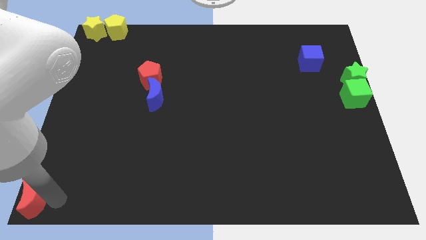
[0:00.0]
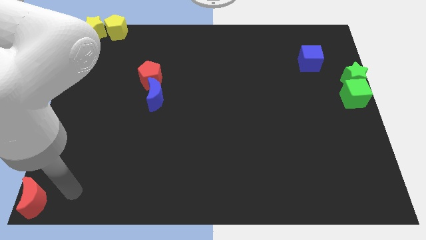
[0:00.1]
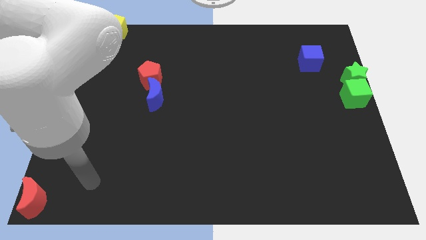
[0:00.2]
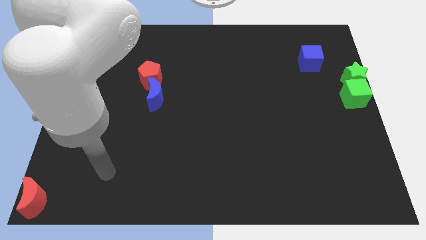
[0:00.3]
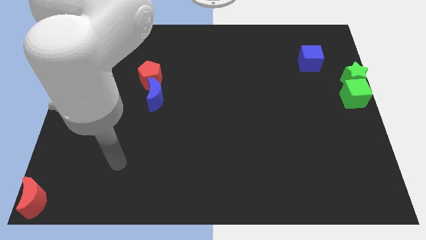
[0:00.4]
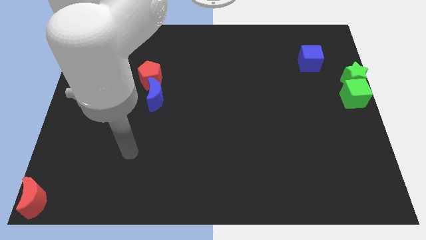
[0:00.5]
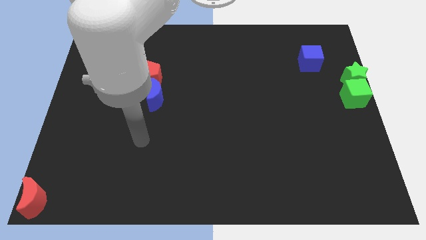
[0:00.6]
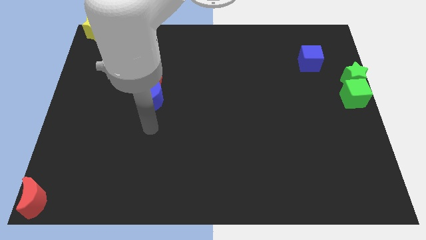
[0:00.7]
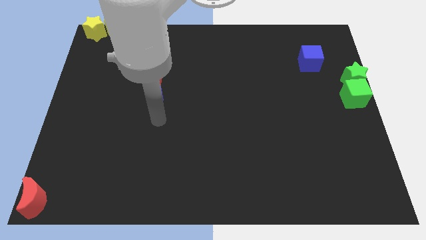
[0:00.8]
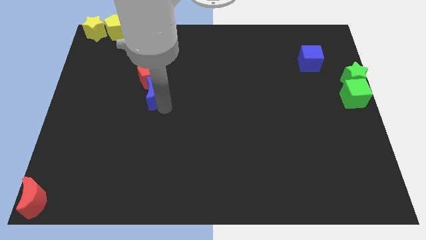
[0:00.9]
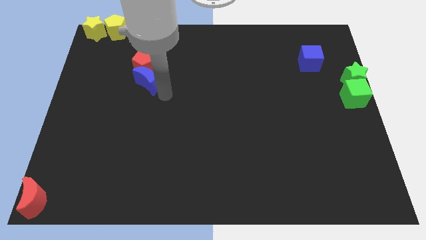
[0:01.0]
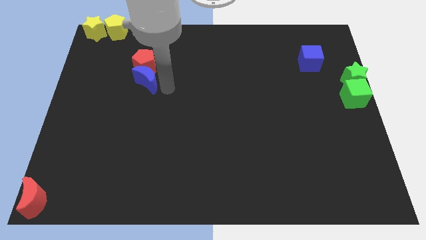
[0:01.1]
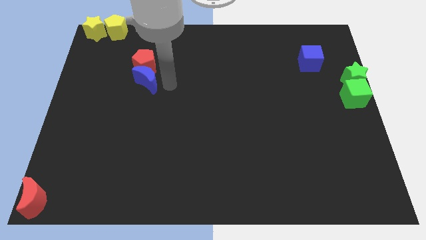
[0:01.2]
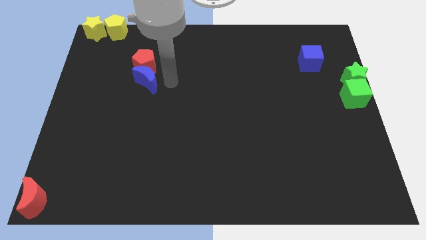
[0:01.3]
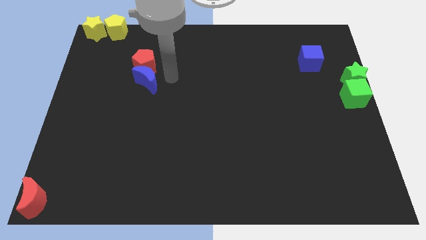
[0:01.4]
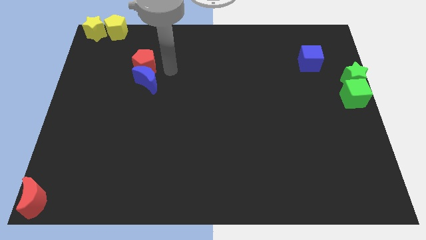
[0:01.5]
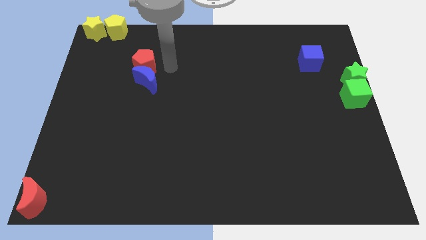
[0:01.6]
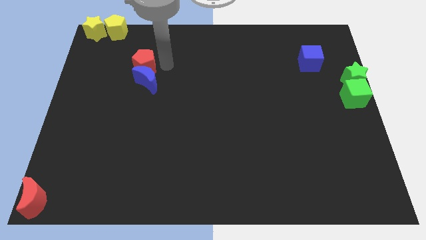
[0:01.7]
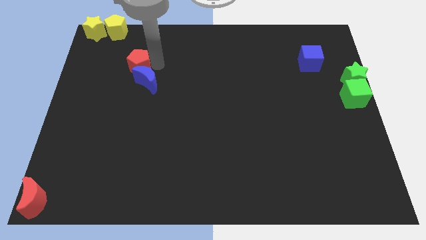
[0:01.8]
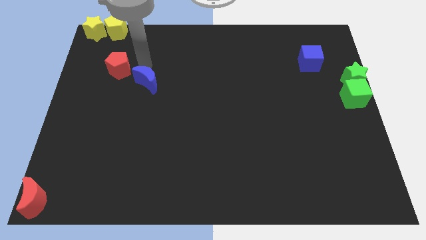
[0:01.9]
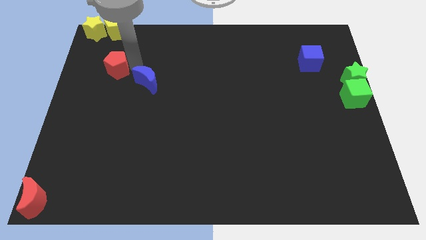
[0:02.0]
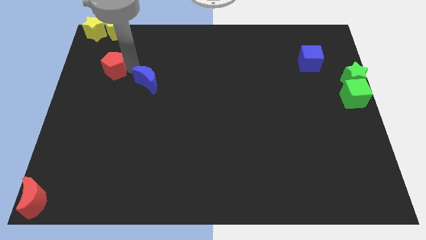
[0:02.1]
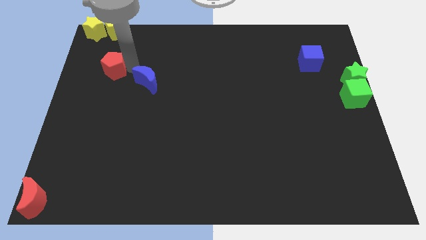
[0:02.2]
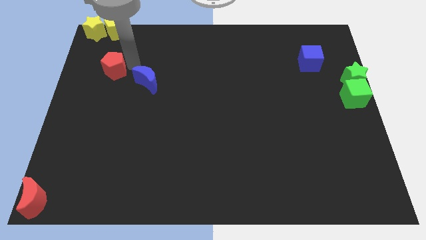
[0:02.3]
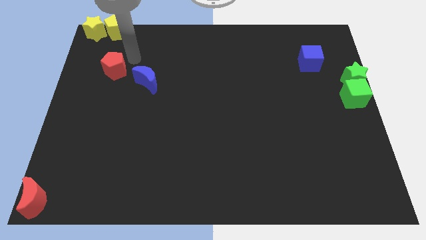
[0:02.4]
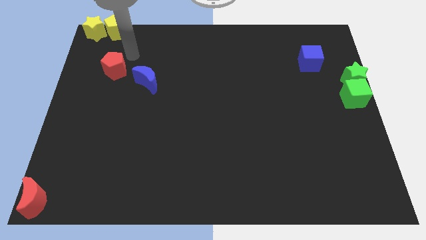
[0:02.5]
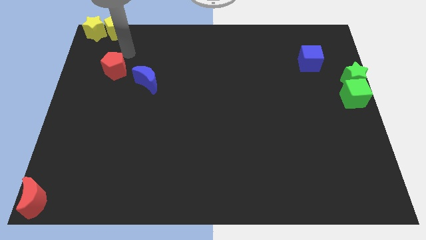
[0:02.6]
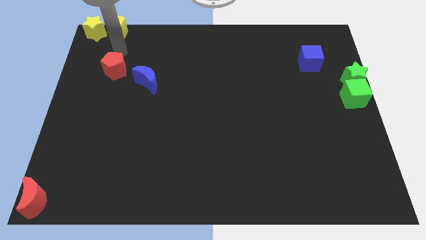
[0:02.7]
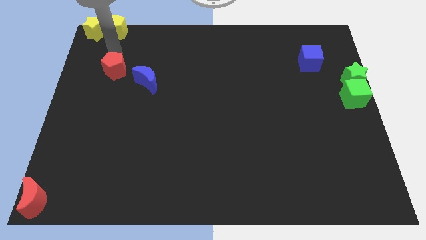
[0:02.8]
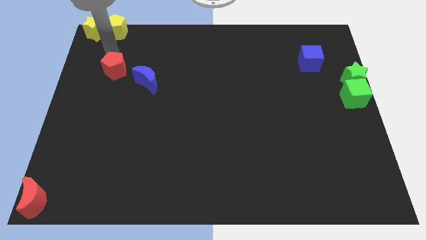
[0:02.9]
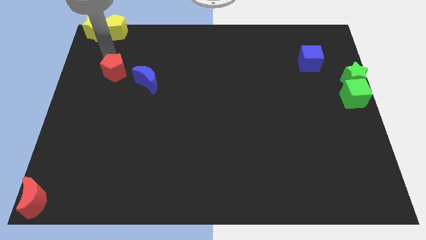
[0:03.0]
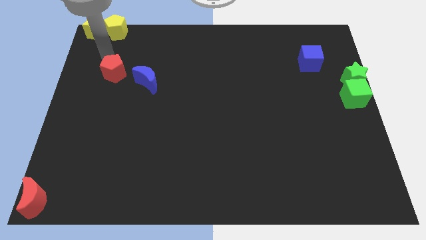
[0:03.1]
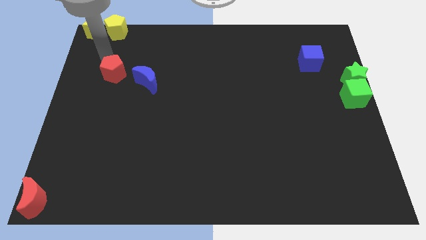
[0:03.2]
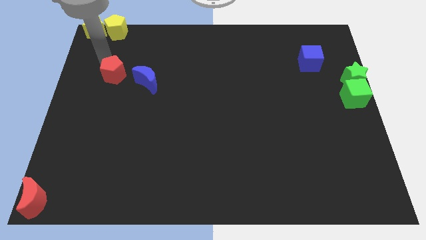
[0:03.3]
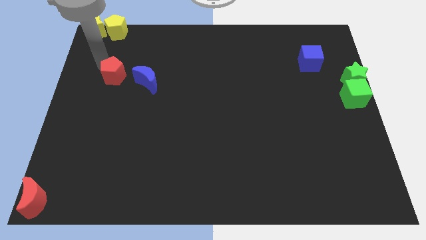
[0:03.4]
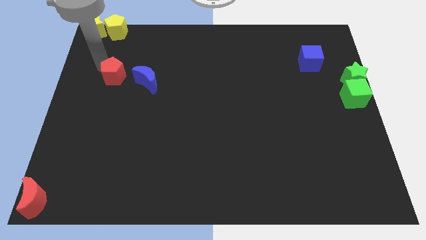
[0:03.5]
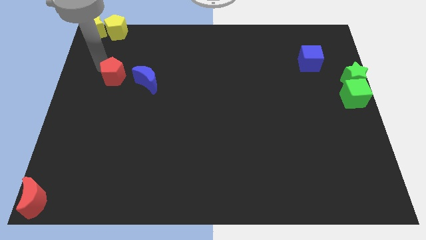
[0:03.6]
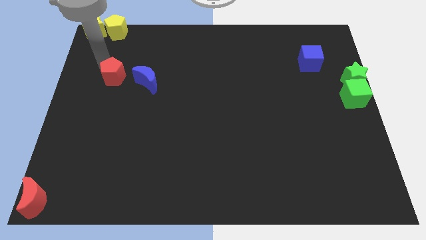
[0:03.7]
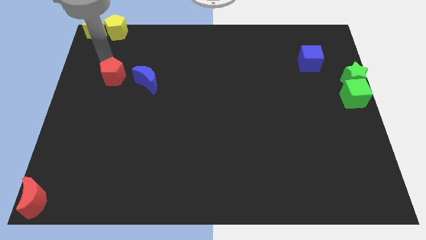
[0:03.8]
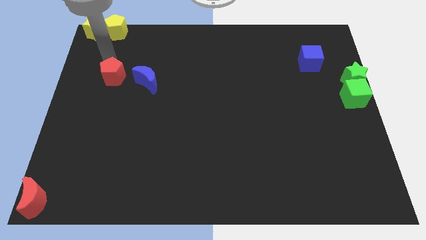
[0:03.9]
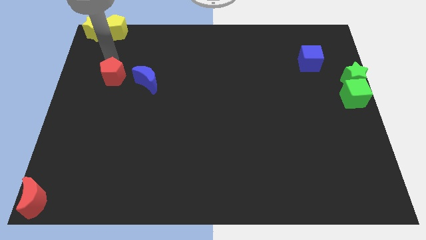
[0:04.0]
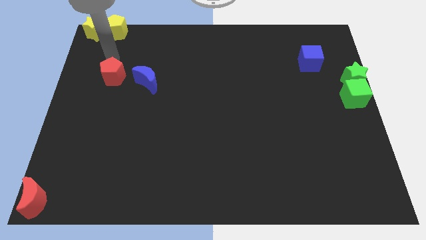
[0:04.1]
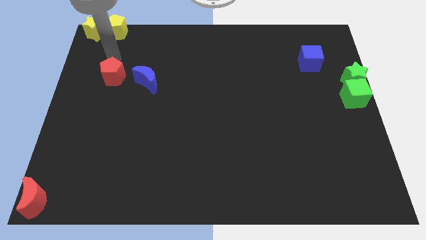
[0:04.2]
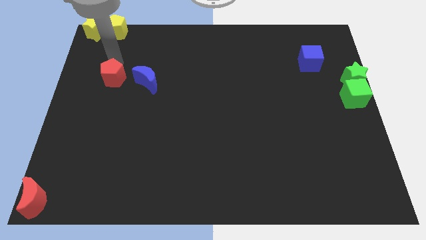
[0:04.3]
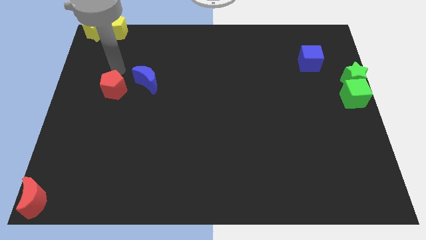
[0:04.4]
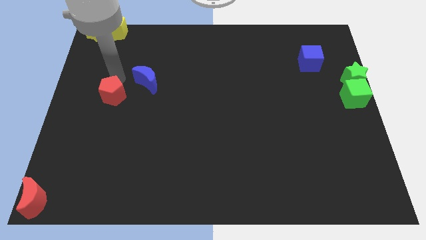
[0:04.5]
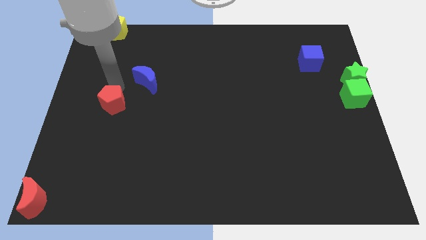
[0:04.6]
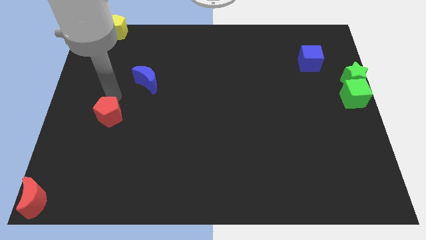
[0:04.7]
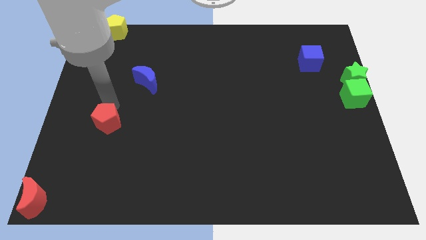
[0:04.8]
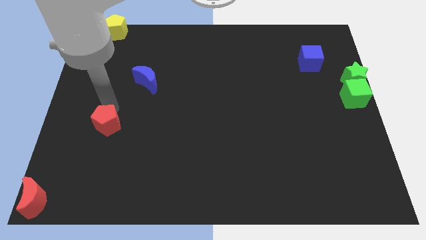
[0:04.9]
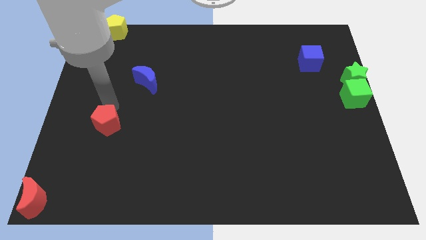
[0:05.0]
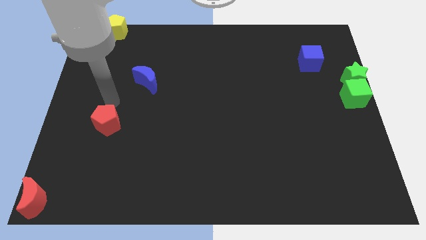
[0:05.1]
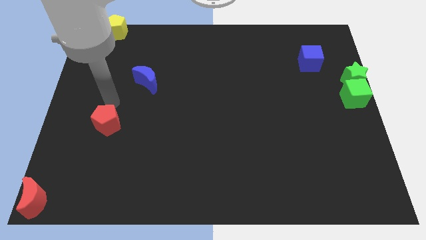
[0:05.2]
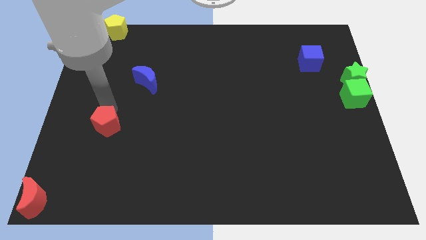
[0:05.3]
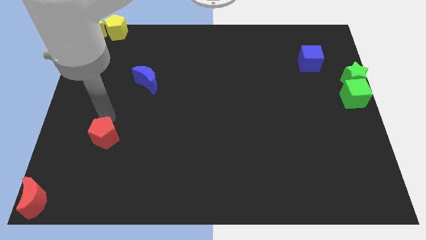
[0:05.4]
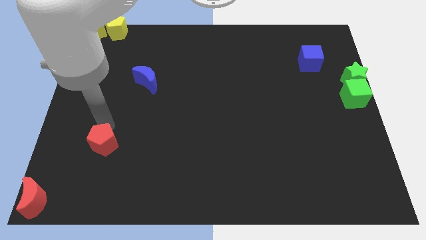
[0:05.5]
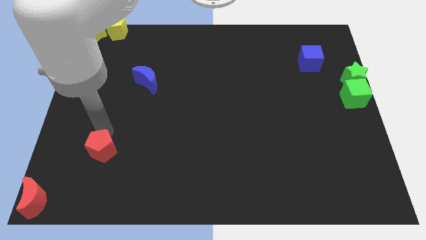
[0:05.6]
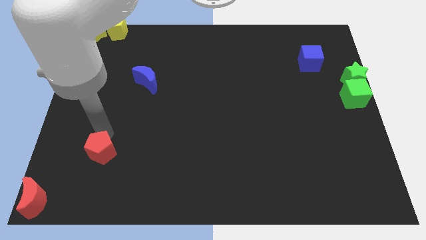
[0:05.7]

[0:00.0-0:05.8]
push the red pentagon to the bottom side of the board

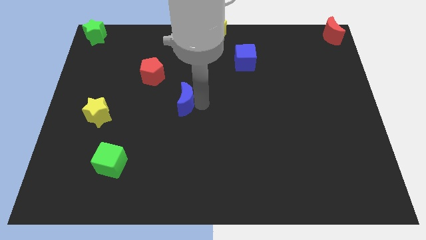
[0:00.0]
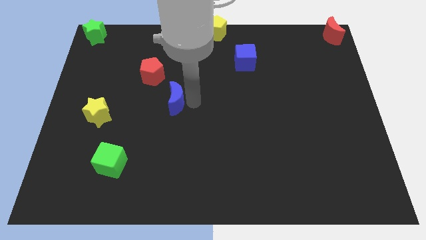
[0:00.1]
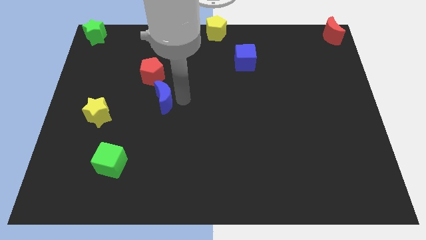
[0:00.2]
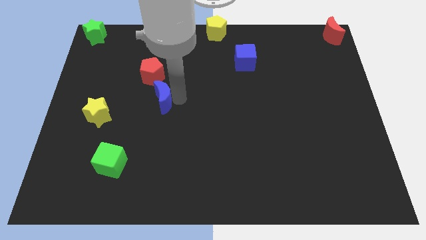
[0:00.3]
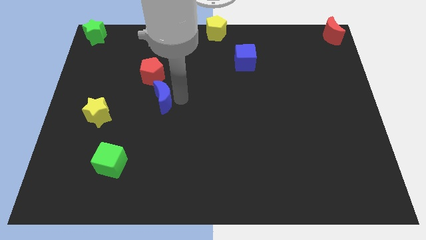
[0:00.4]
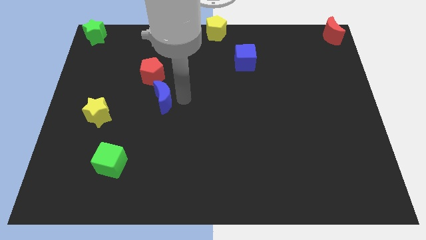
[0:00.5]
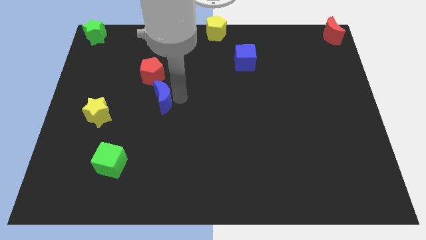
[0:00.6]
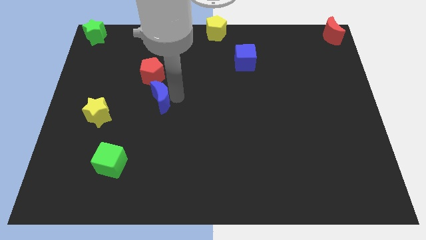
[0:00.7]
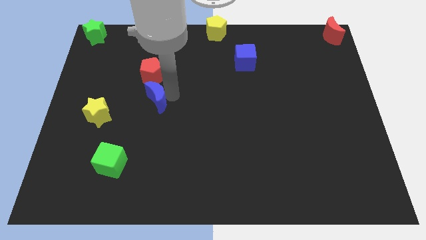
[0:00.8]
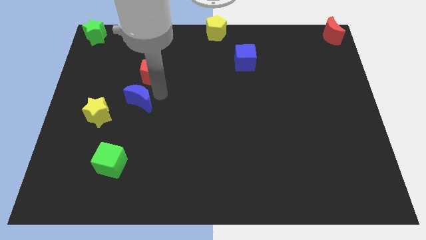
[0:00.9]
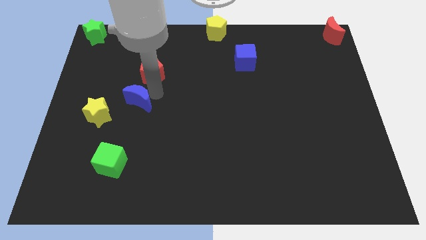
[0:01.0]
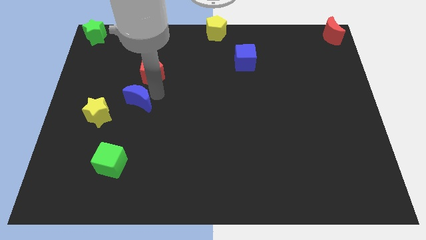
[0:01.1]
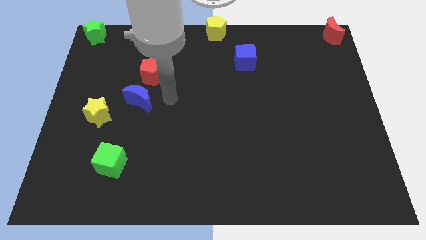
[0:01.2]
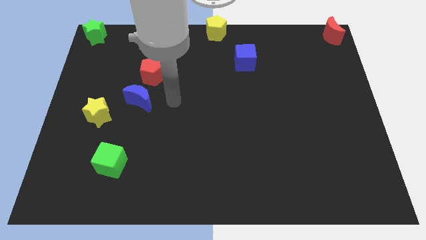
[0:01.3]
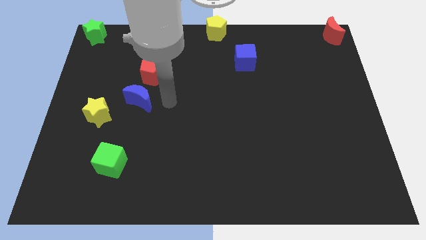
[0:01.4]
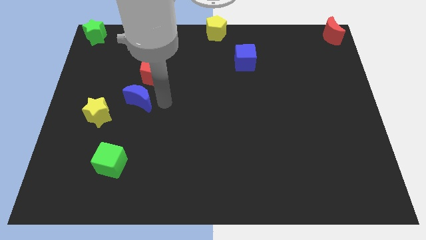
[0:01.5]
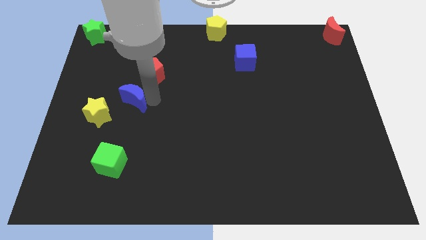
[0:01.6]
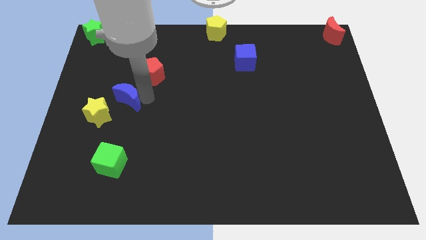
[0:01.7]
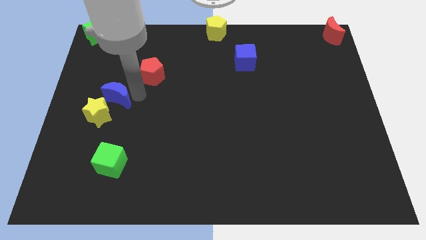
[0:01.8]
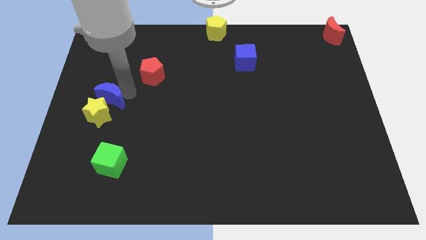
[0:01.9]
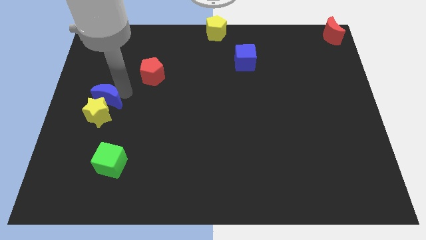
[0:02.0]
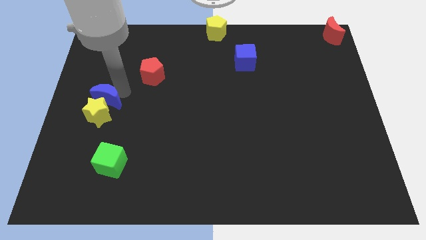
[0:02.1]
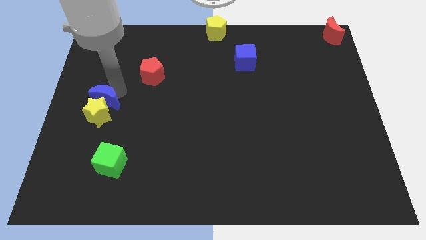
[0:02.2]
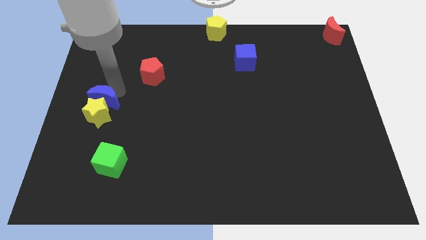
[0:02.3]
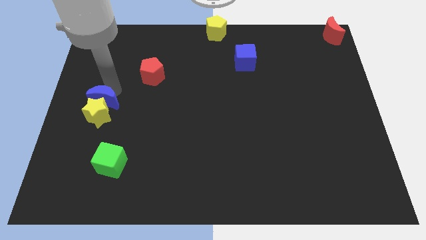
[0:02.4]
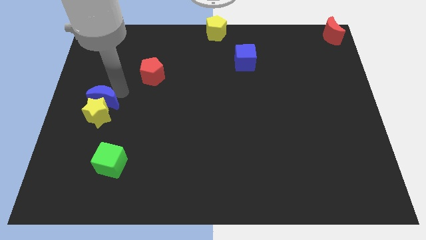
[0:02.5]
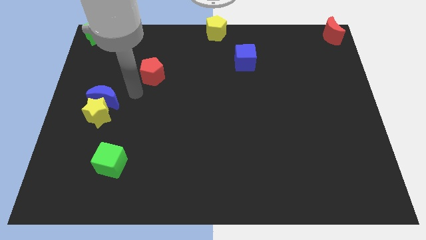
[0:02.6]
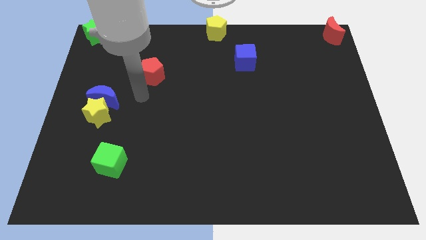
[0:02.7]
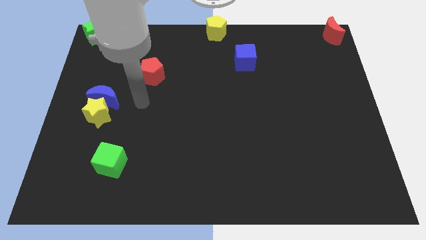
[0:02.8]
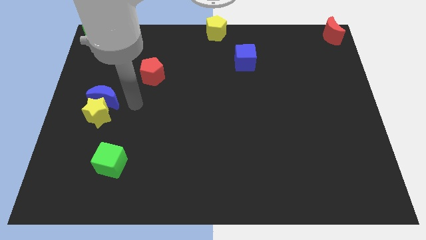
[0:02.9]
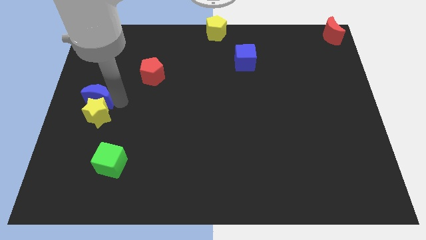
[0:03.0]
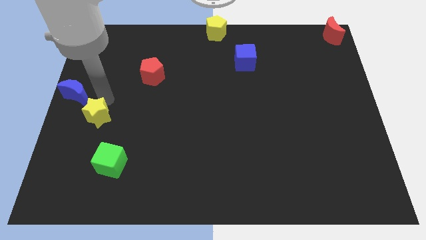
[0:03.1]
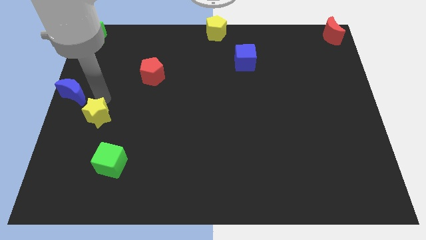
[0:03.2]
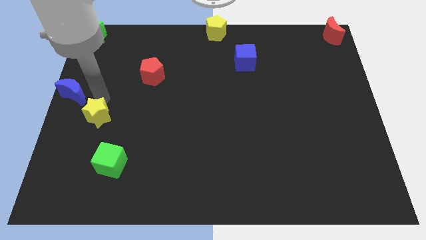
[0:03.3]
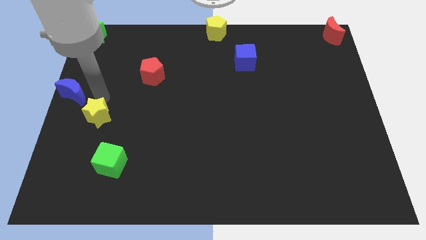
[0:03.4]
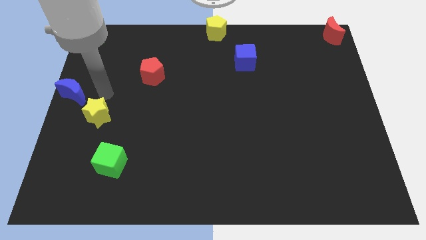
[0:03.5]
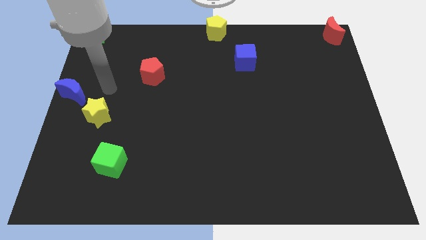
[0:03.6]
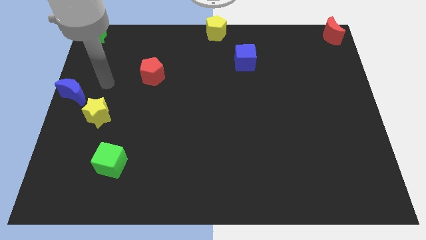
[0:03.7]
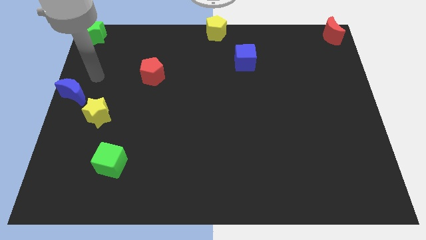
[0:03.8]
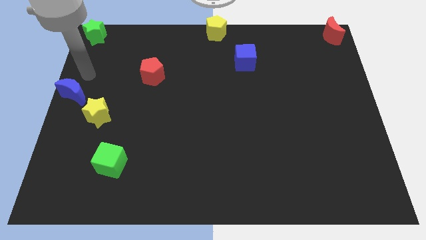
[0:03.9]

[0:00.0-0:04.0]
move the blue moon to the left center of the board
